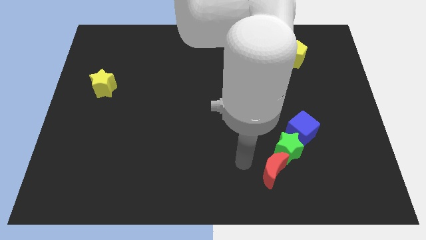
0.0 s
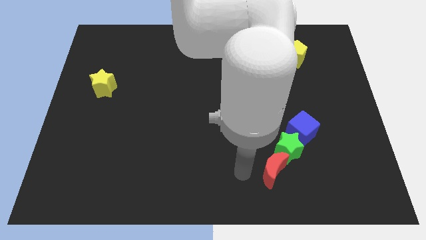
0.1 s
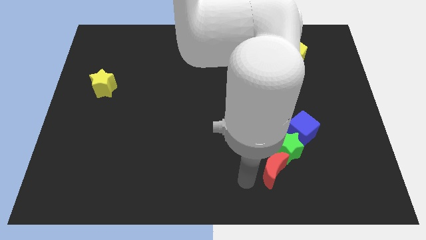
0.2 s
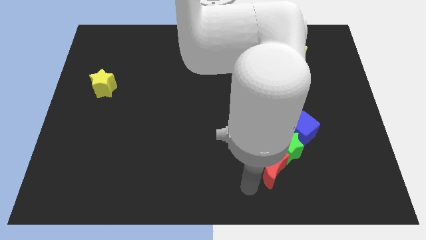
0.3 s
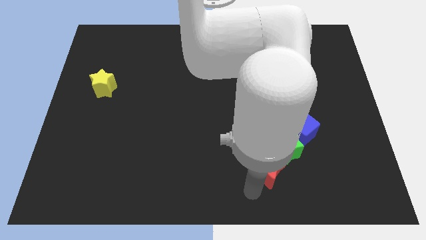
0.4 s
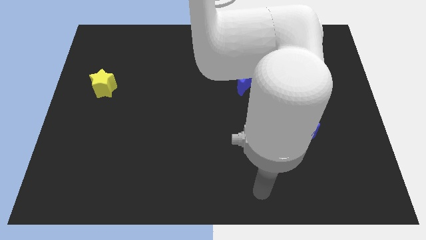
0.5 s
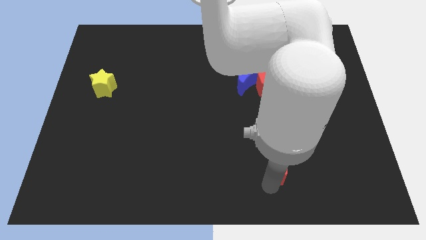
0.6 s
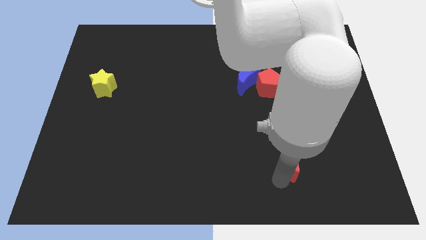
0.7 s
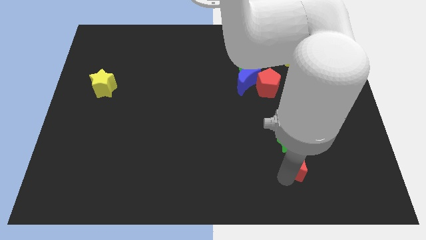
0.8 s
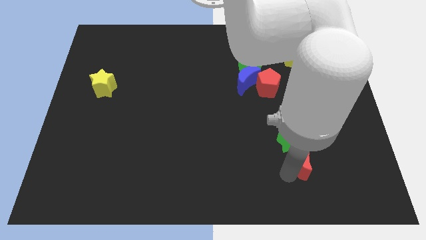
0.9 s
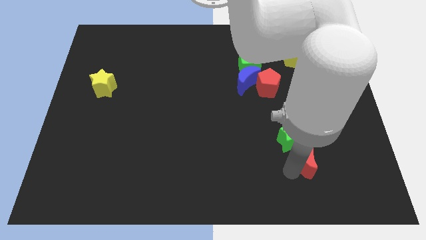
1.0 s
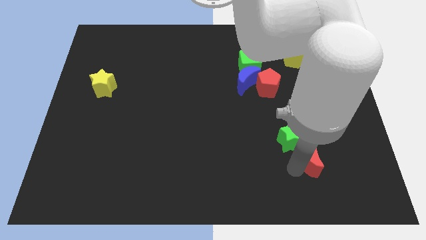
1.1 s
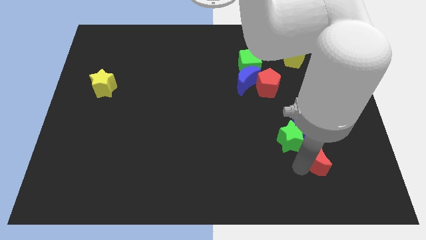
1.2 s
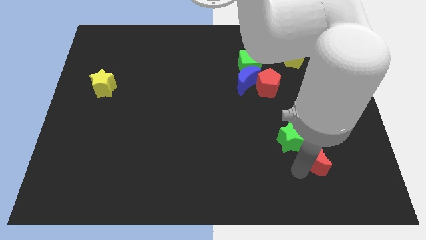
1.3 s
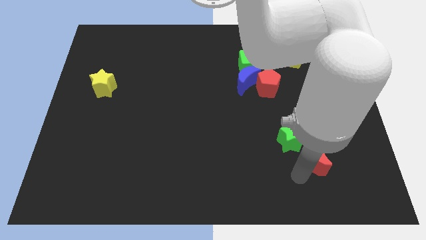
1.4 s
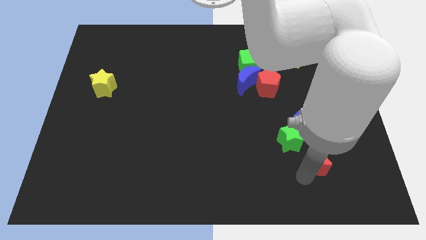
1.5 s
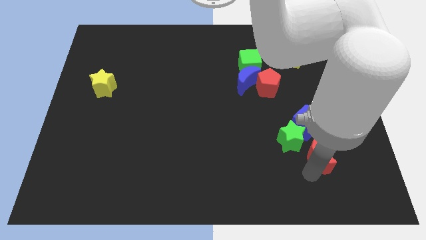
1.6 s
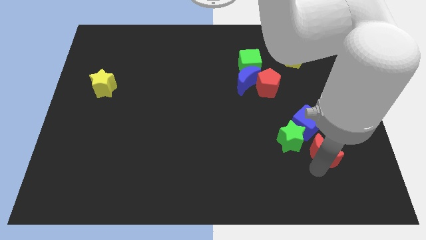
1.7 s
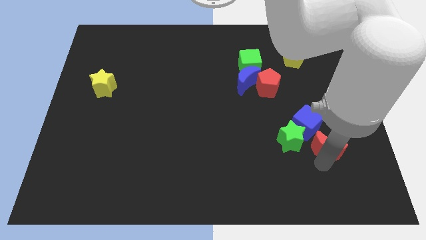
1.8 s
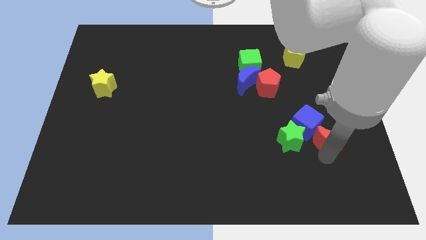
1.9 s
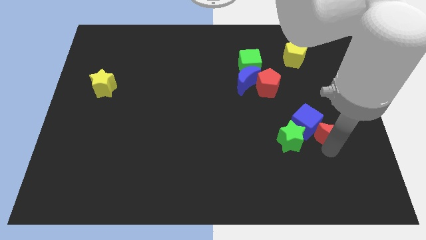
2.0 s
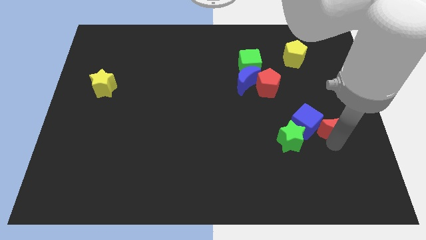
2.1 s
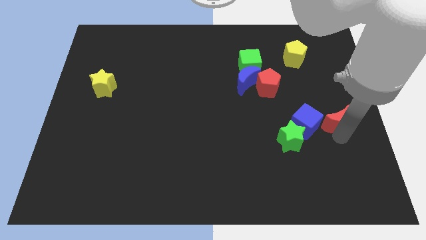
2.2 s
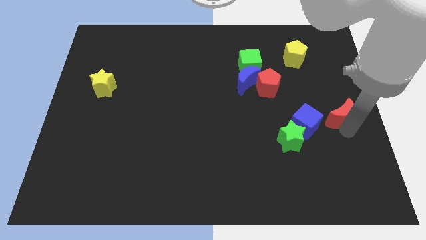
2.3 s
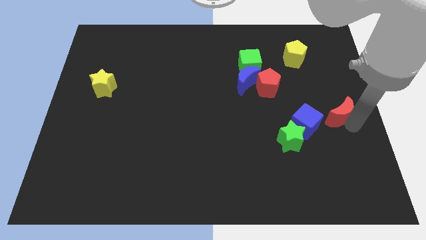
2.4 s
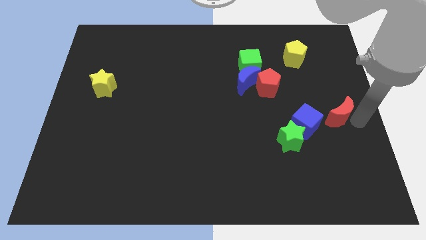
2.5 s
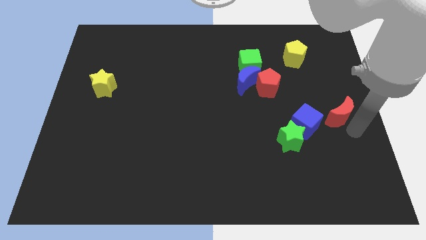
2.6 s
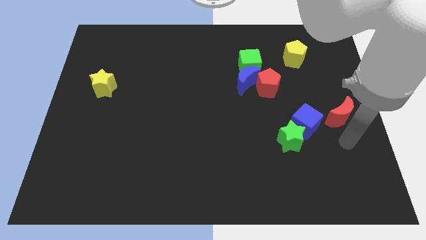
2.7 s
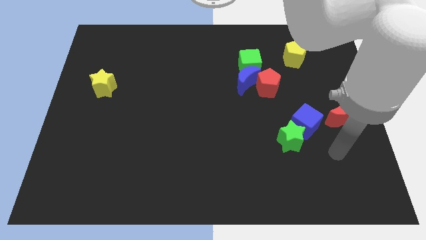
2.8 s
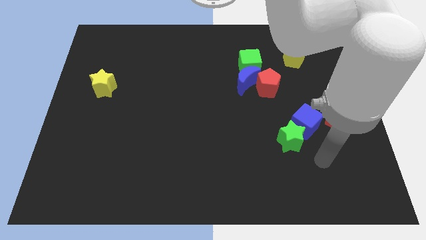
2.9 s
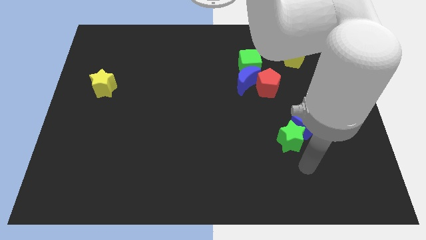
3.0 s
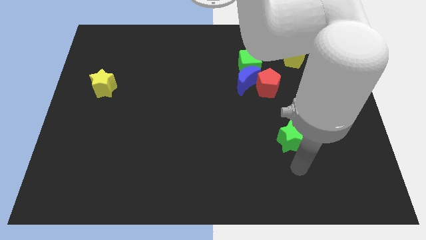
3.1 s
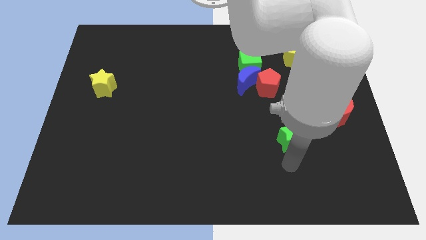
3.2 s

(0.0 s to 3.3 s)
place the red crescent to the right side of the blue cube

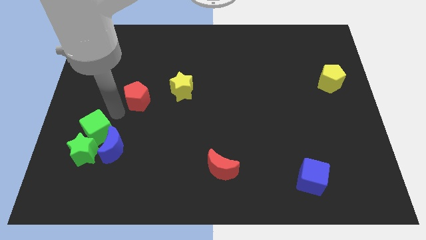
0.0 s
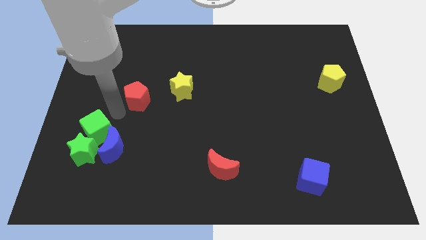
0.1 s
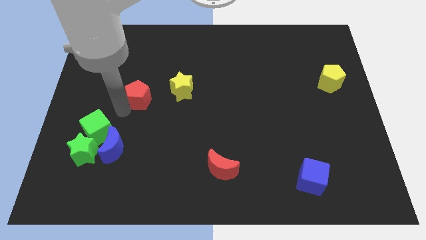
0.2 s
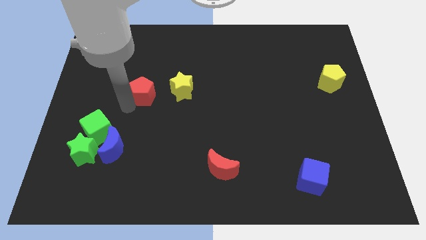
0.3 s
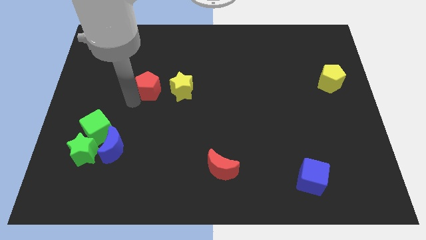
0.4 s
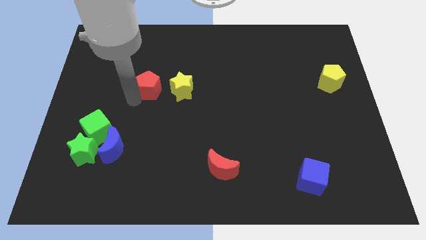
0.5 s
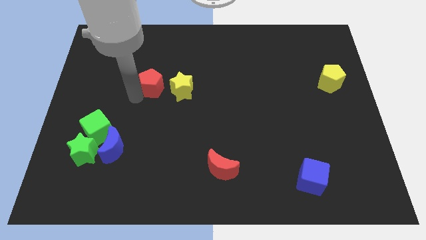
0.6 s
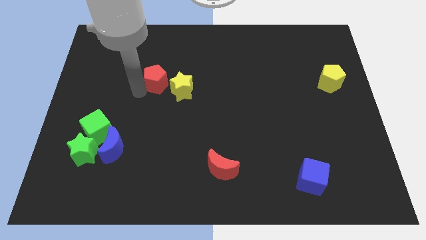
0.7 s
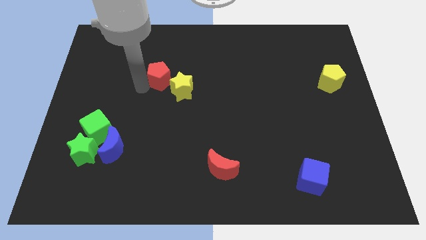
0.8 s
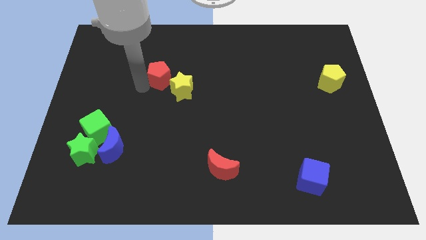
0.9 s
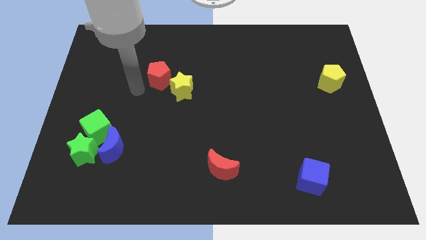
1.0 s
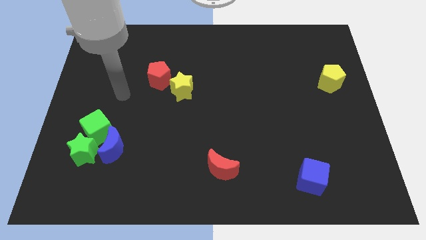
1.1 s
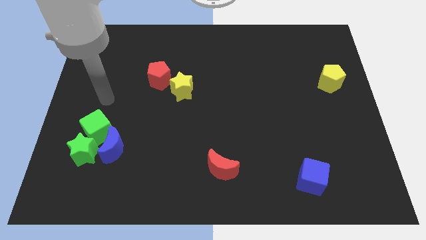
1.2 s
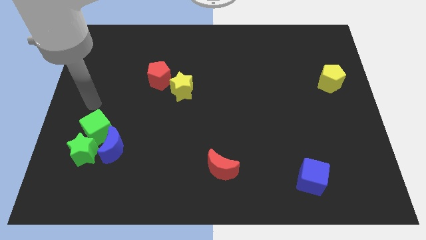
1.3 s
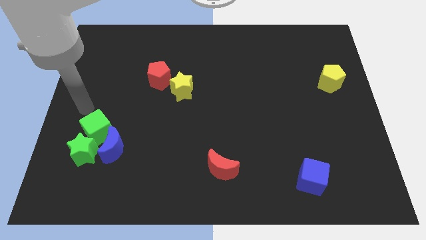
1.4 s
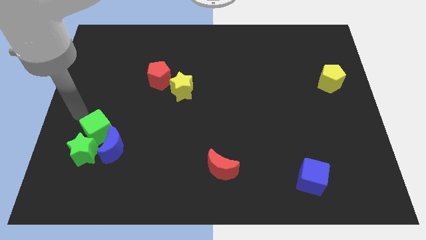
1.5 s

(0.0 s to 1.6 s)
push red pentagon into yellow star

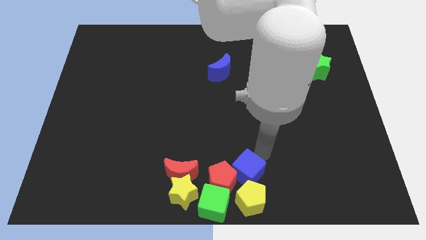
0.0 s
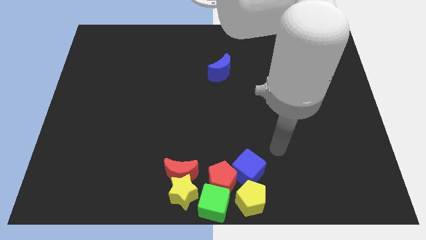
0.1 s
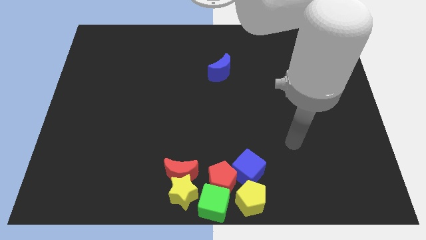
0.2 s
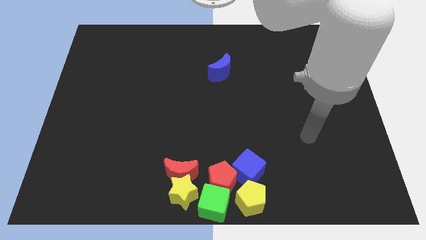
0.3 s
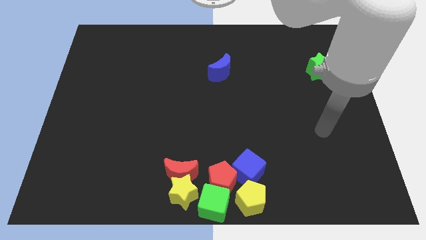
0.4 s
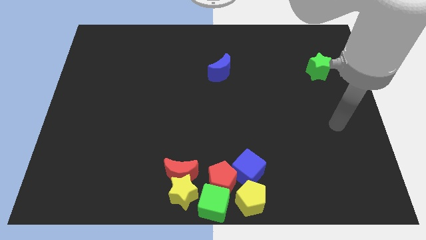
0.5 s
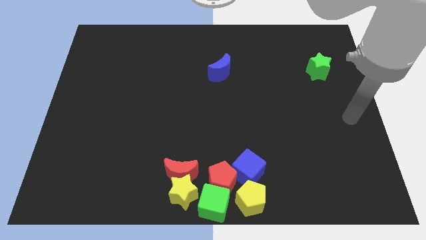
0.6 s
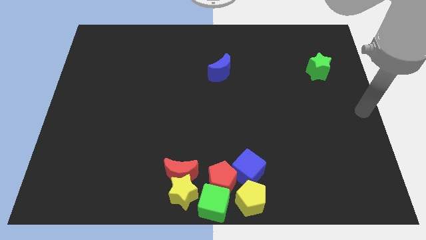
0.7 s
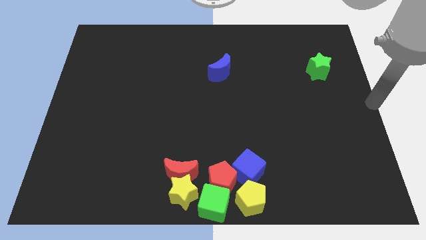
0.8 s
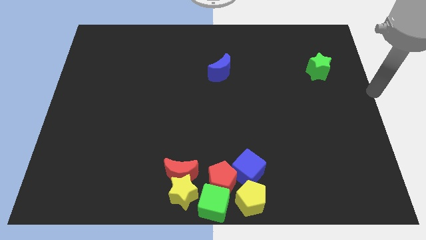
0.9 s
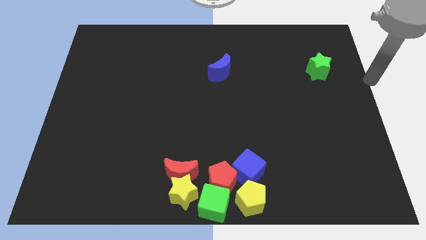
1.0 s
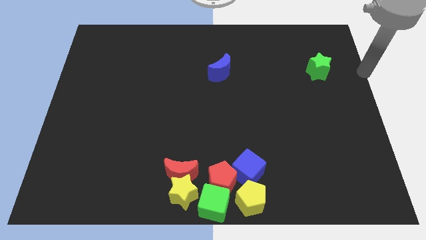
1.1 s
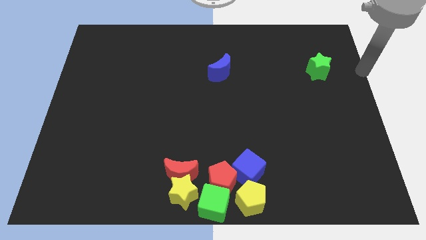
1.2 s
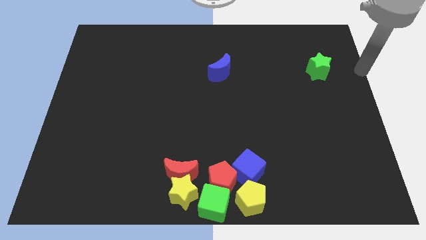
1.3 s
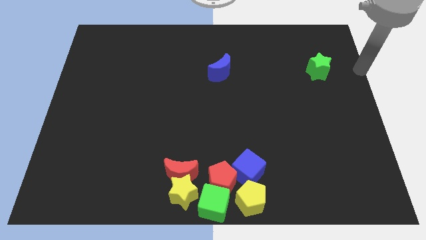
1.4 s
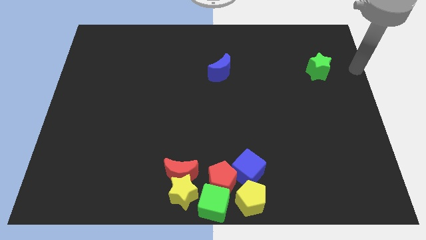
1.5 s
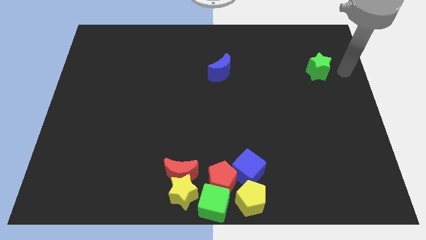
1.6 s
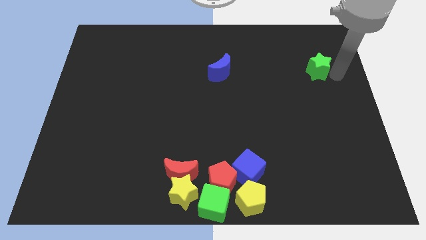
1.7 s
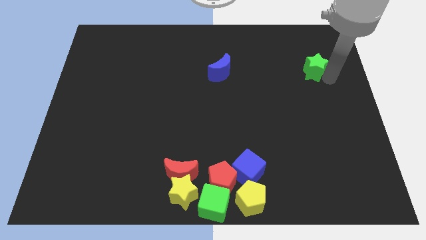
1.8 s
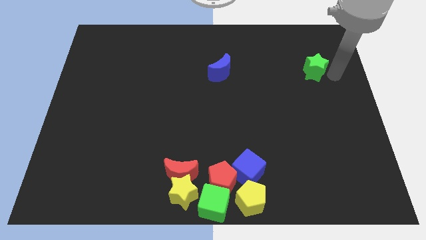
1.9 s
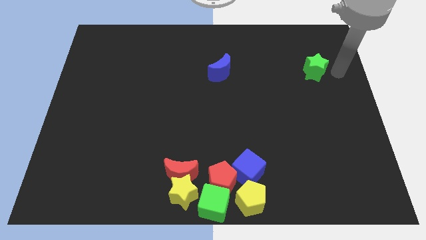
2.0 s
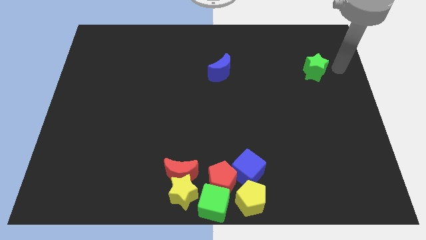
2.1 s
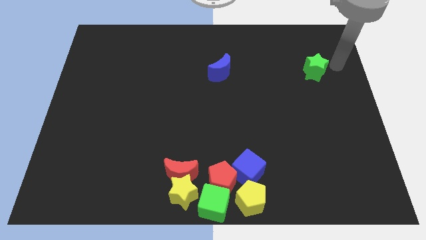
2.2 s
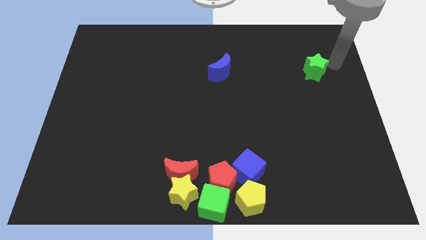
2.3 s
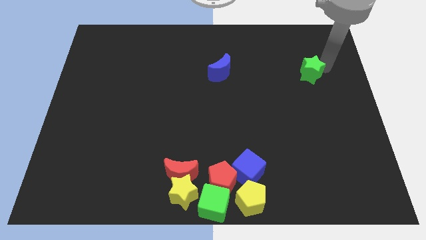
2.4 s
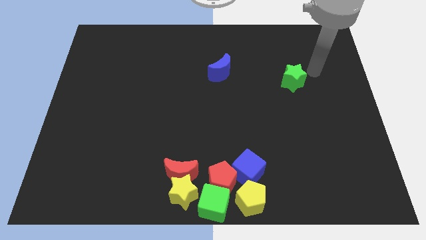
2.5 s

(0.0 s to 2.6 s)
slightly move the green star to the left side

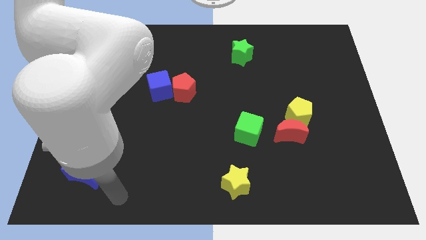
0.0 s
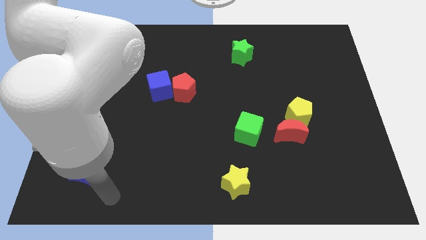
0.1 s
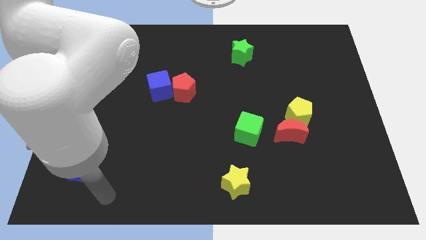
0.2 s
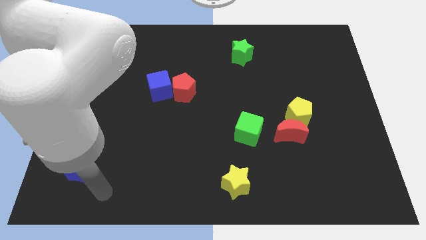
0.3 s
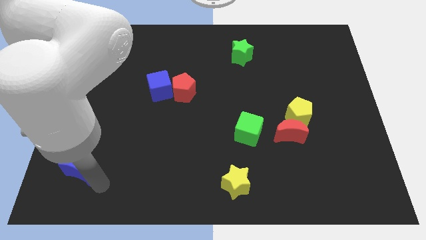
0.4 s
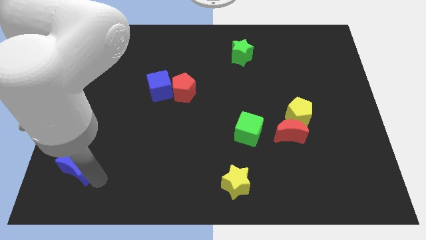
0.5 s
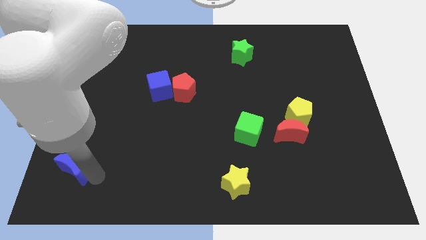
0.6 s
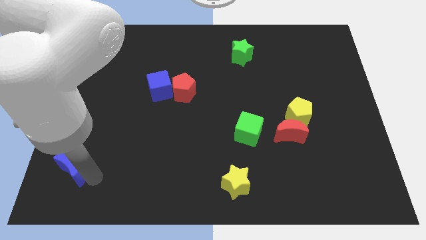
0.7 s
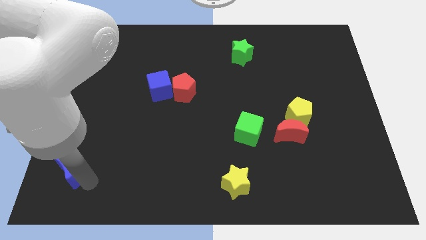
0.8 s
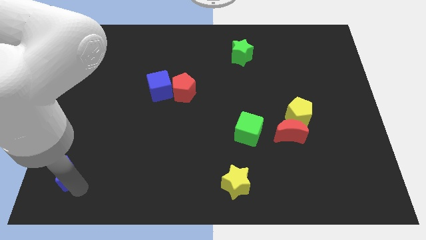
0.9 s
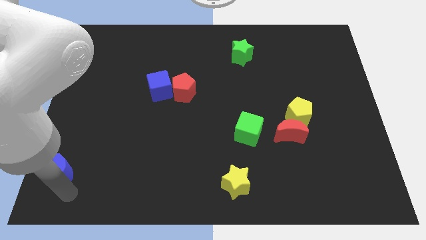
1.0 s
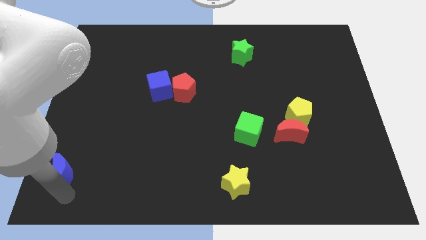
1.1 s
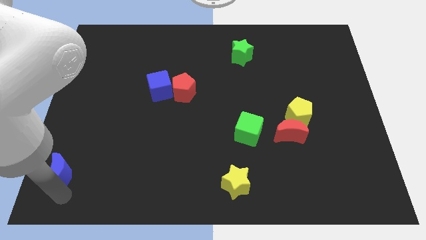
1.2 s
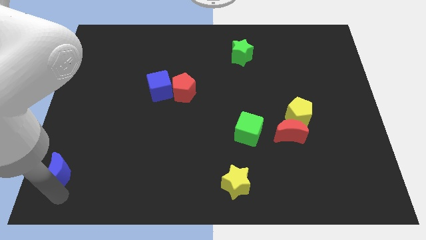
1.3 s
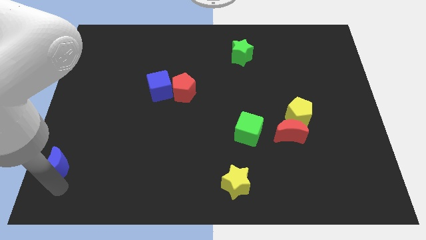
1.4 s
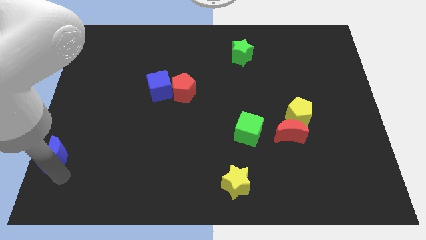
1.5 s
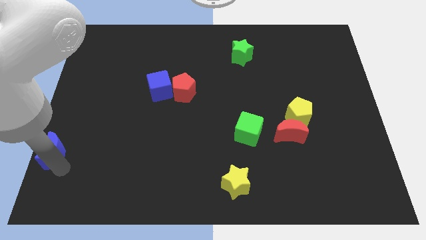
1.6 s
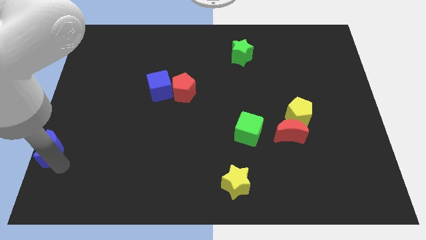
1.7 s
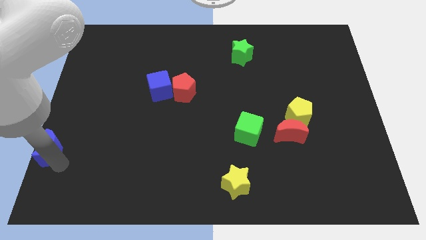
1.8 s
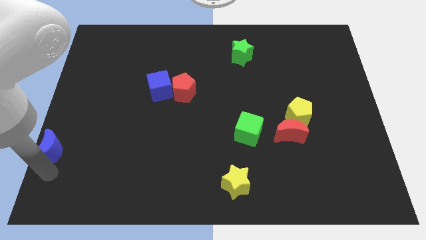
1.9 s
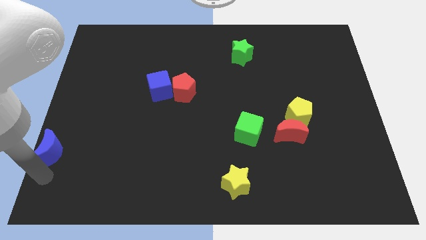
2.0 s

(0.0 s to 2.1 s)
move blue moon towards the bottom left of the board
